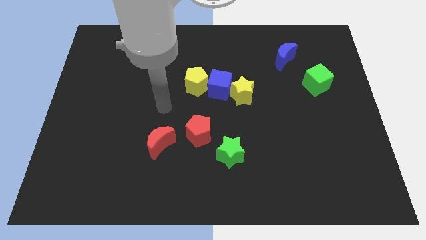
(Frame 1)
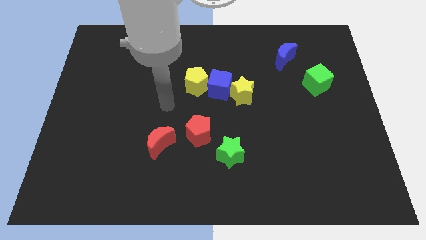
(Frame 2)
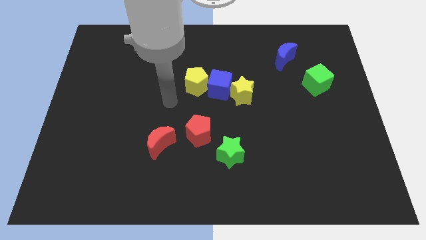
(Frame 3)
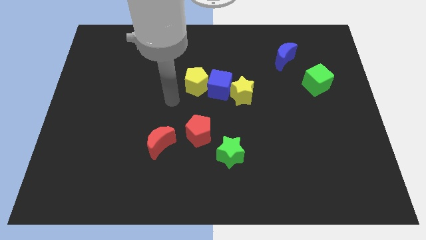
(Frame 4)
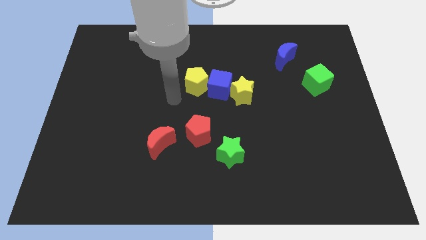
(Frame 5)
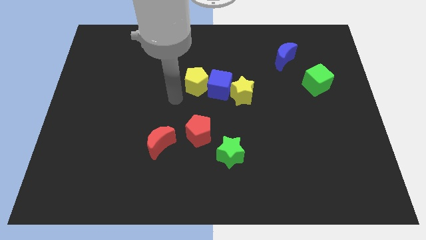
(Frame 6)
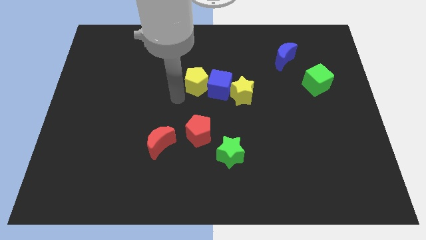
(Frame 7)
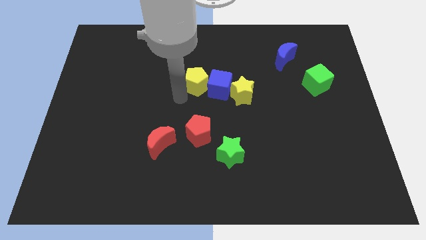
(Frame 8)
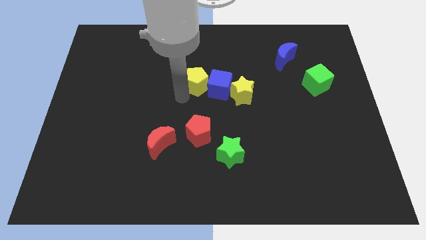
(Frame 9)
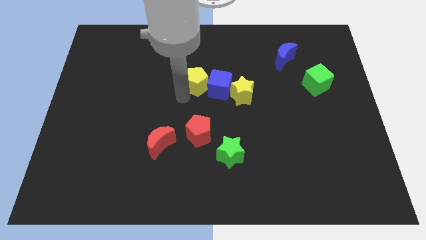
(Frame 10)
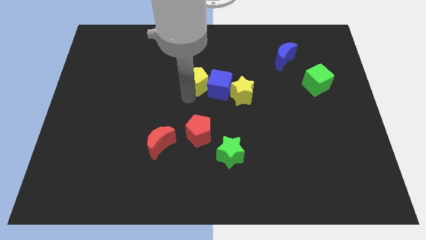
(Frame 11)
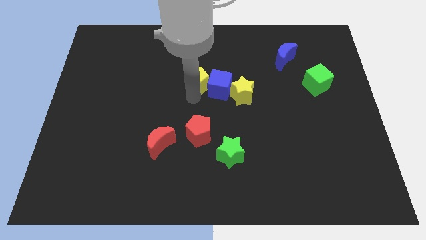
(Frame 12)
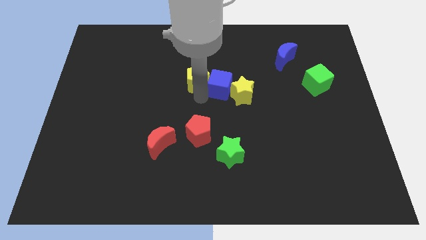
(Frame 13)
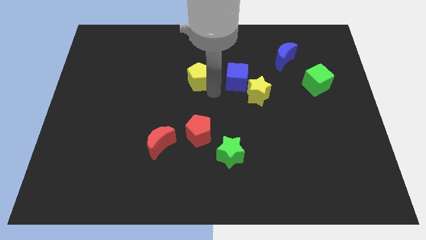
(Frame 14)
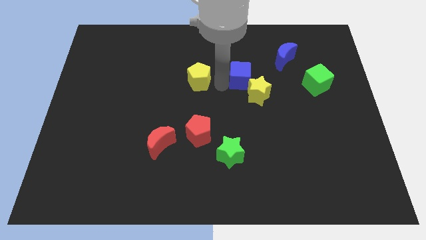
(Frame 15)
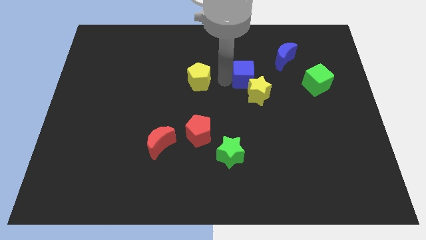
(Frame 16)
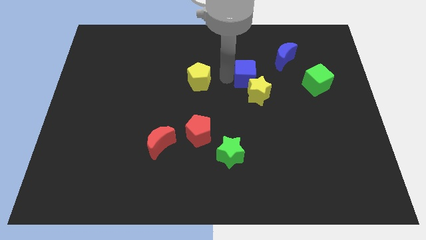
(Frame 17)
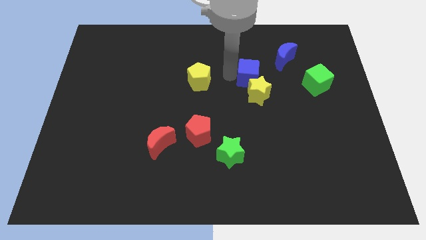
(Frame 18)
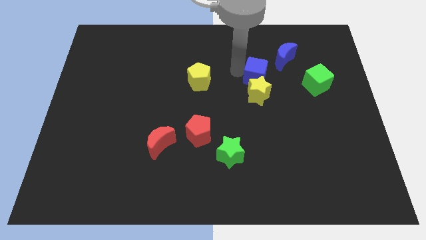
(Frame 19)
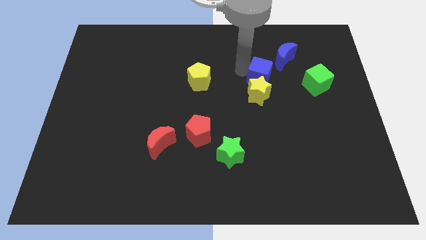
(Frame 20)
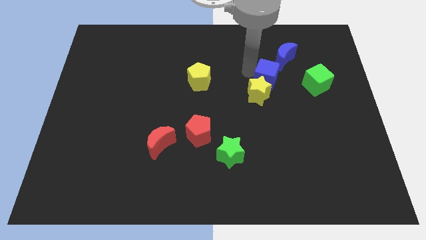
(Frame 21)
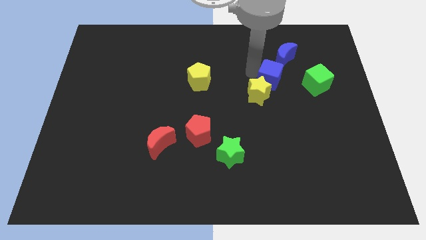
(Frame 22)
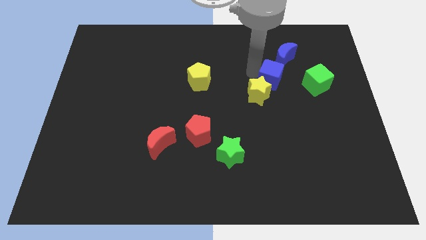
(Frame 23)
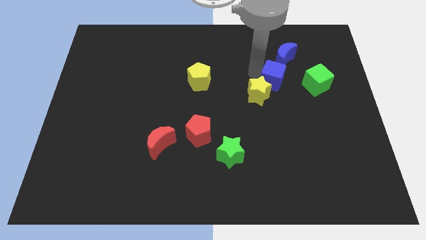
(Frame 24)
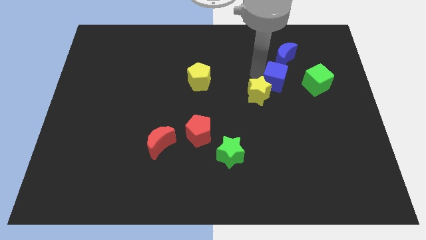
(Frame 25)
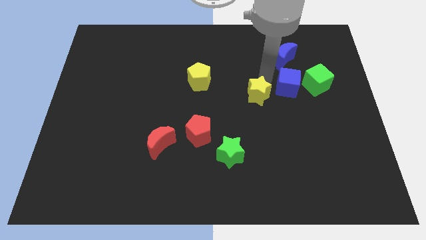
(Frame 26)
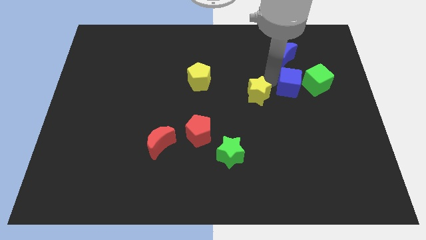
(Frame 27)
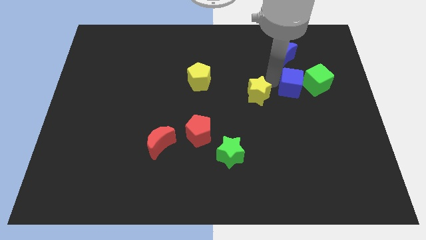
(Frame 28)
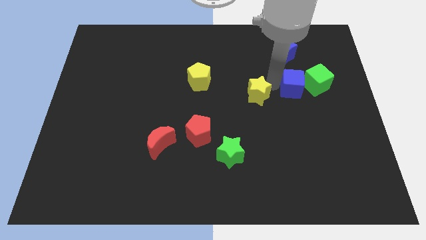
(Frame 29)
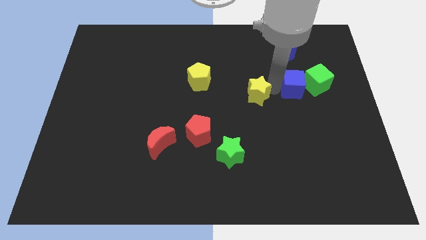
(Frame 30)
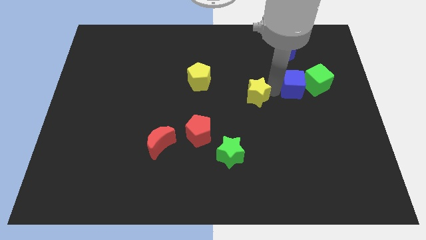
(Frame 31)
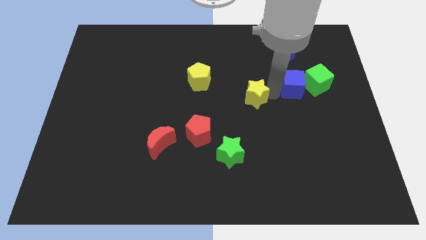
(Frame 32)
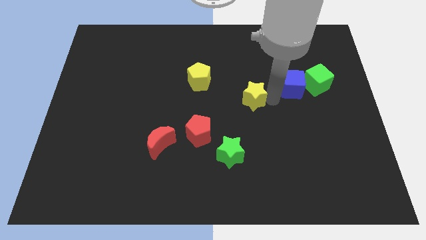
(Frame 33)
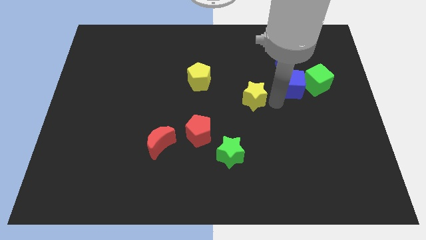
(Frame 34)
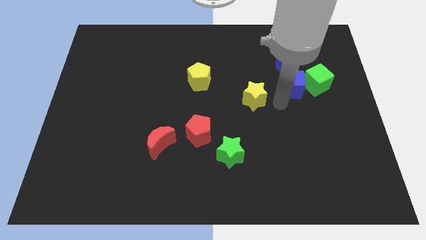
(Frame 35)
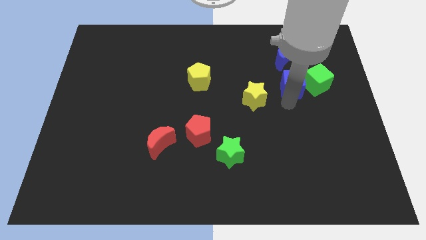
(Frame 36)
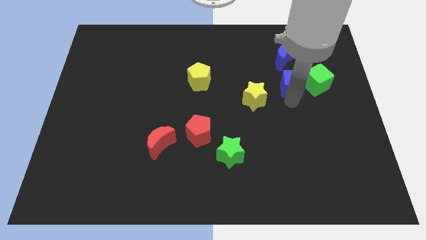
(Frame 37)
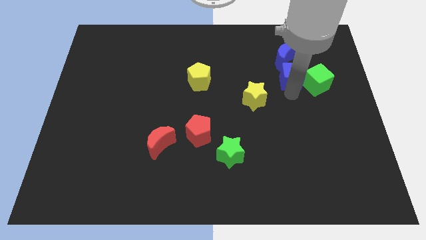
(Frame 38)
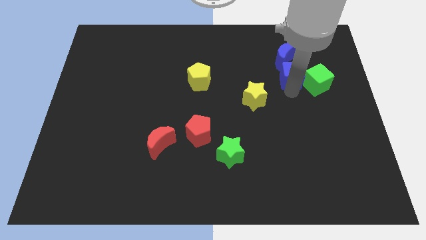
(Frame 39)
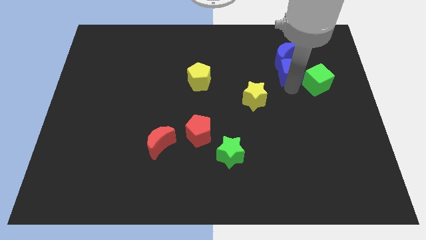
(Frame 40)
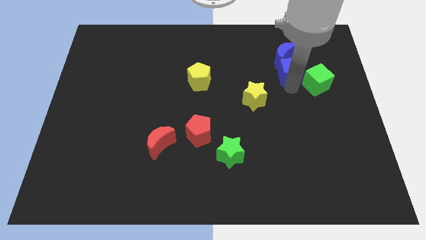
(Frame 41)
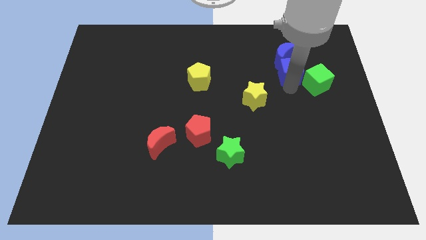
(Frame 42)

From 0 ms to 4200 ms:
move the blue cube to the top right side of the green cube

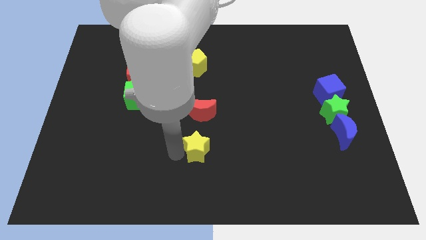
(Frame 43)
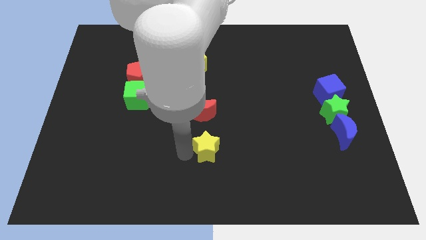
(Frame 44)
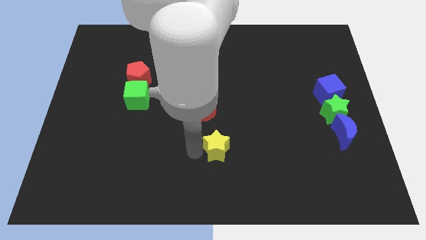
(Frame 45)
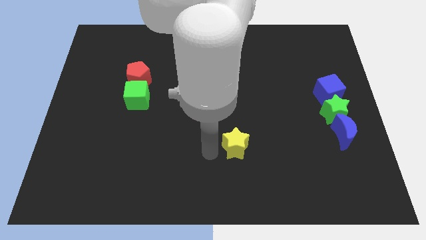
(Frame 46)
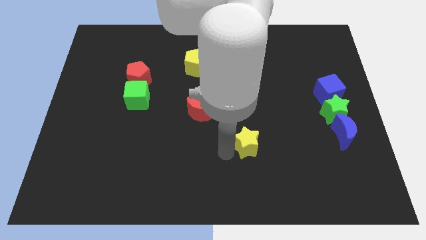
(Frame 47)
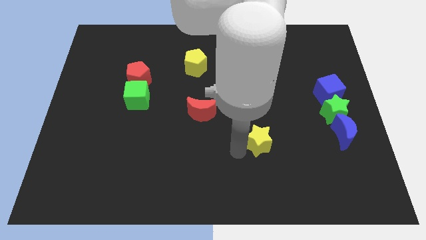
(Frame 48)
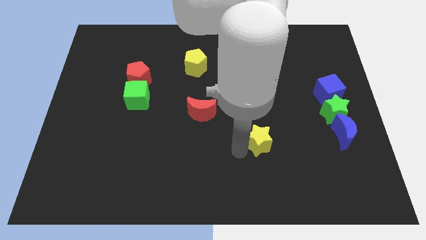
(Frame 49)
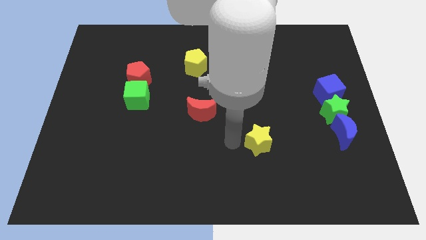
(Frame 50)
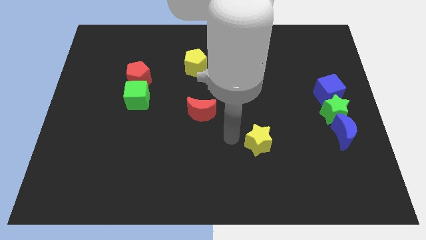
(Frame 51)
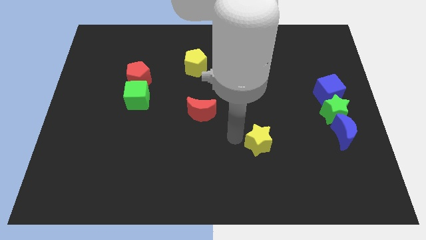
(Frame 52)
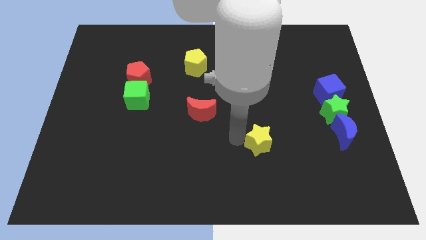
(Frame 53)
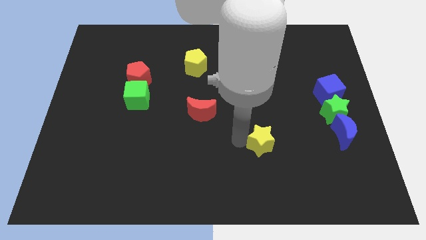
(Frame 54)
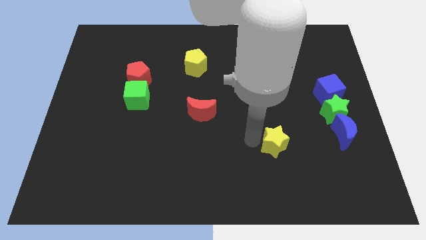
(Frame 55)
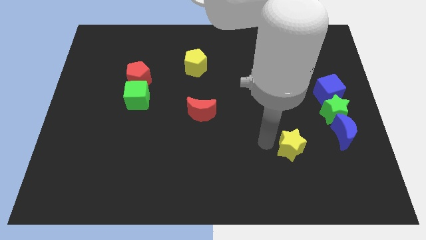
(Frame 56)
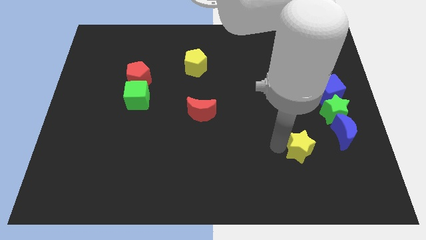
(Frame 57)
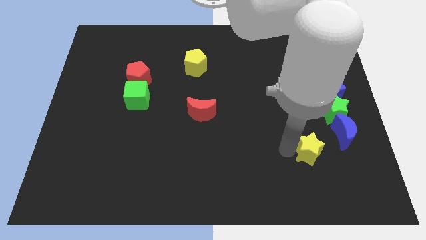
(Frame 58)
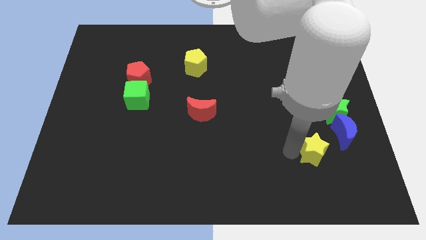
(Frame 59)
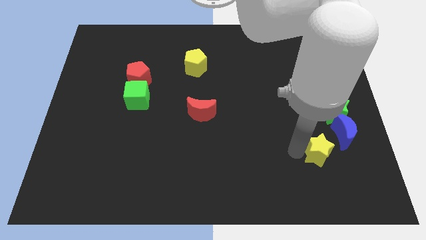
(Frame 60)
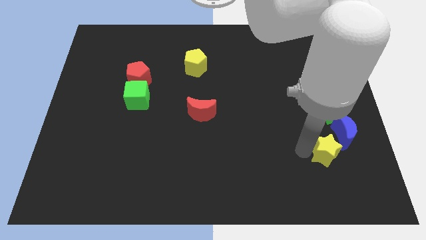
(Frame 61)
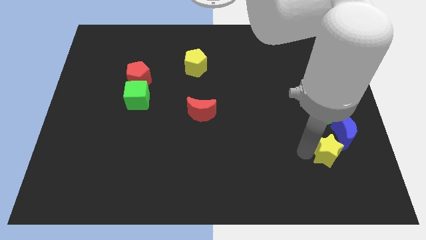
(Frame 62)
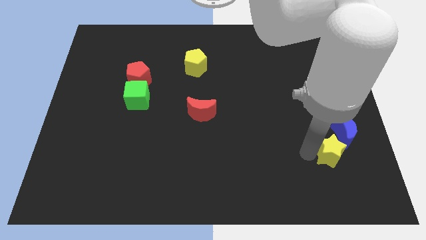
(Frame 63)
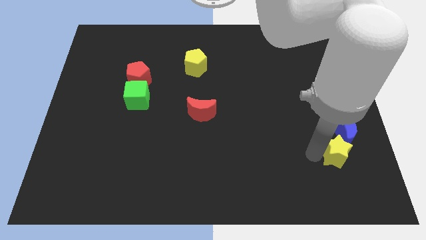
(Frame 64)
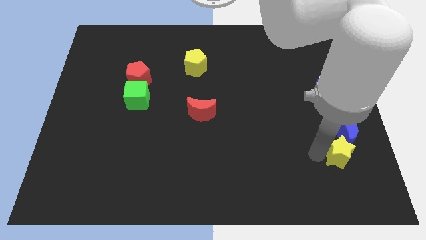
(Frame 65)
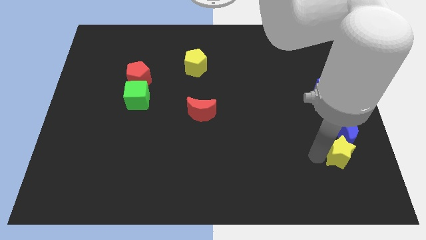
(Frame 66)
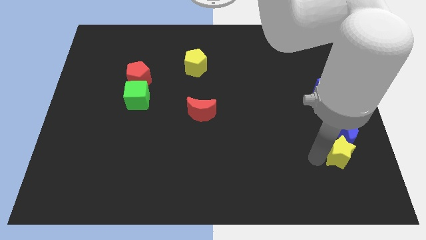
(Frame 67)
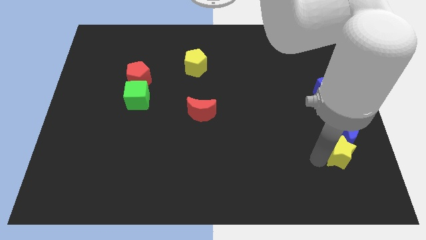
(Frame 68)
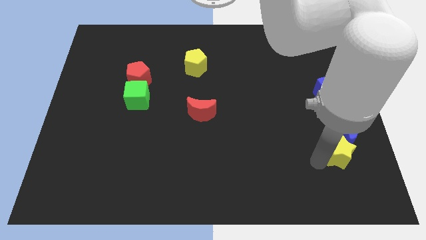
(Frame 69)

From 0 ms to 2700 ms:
place yellow star below blue moon

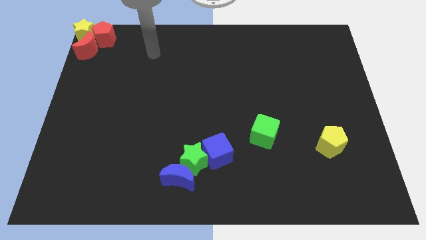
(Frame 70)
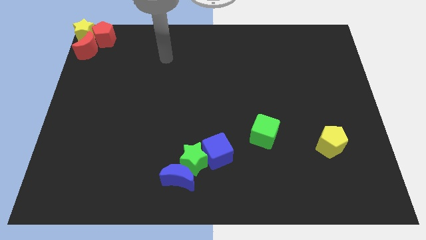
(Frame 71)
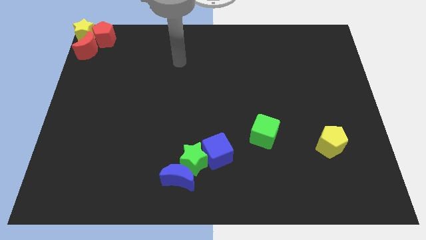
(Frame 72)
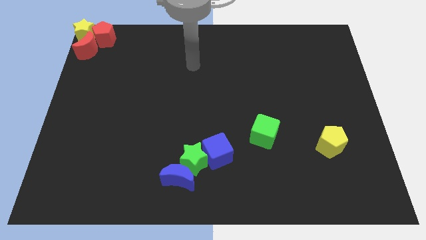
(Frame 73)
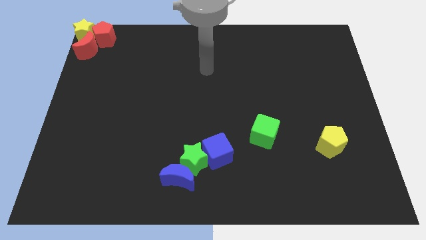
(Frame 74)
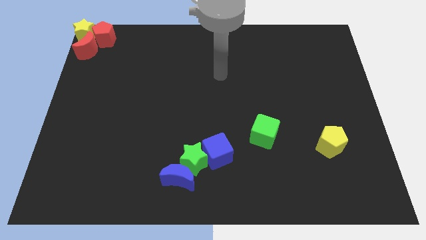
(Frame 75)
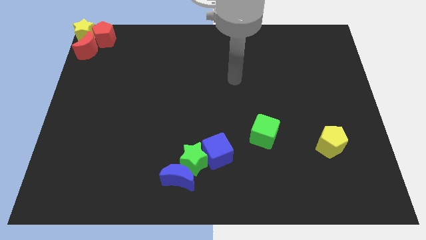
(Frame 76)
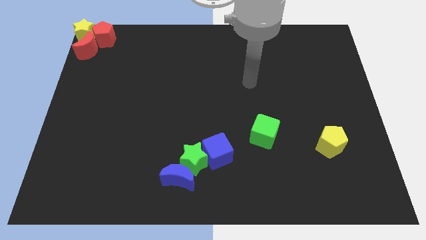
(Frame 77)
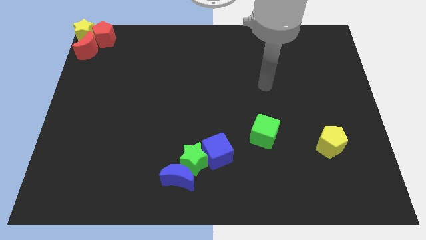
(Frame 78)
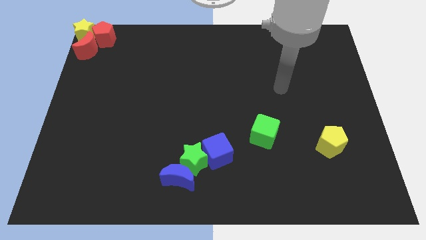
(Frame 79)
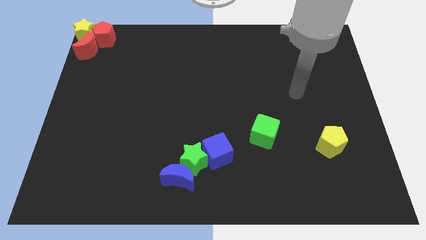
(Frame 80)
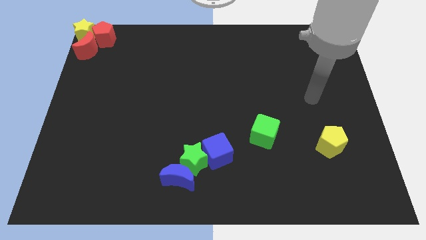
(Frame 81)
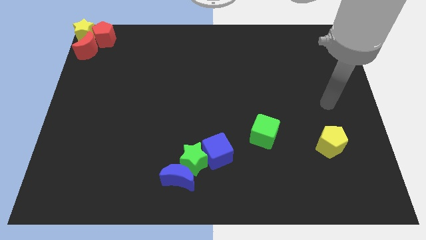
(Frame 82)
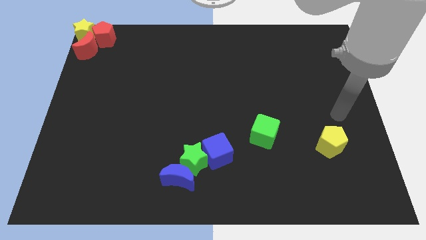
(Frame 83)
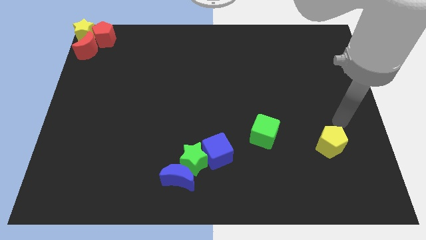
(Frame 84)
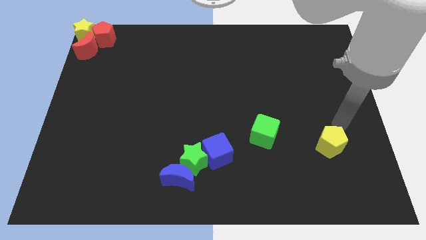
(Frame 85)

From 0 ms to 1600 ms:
point your arm at the top of the yellow pentagon

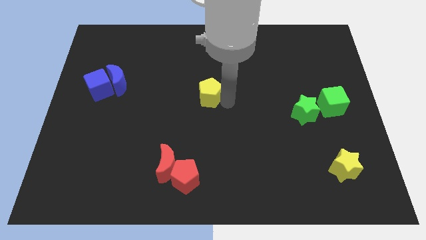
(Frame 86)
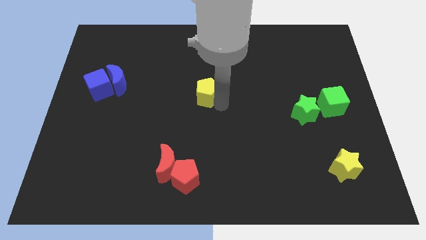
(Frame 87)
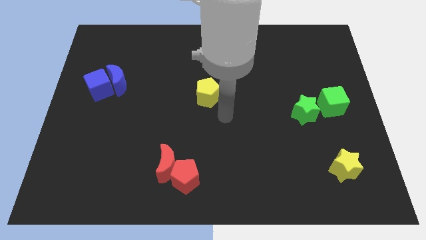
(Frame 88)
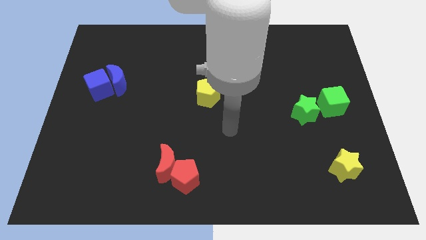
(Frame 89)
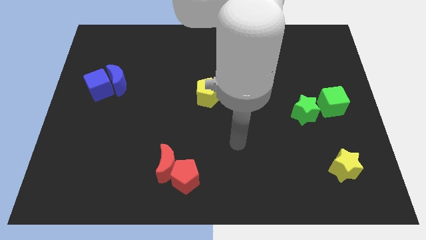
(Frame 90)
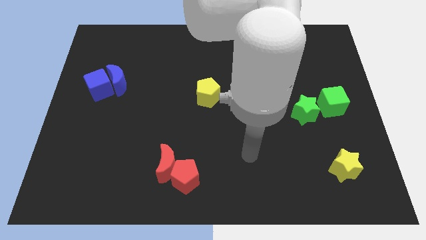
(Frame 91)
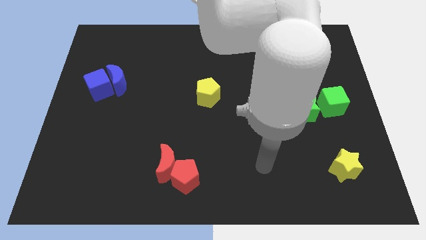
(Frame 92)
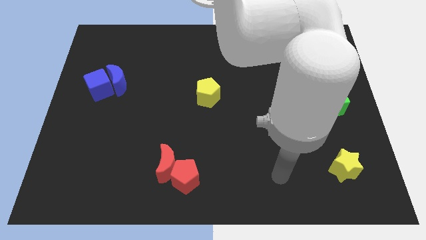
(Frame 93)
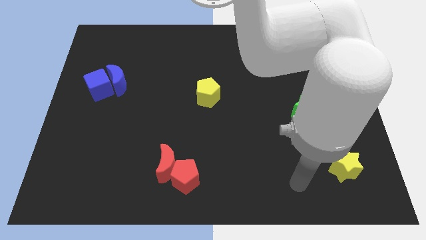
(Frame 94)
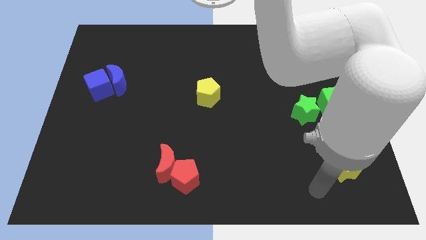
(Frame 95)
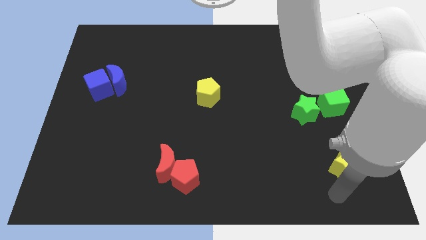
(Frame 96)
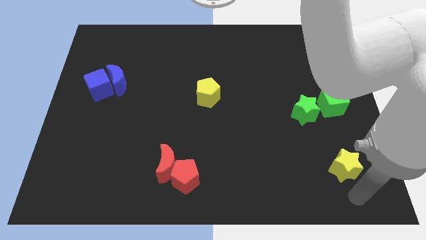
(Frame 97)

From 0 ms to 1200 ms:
place your arm towards the bottom left side of the yellow star
